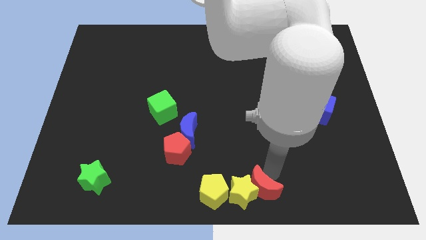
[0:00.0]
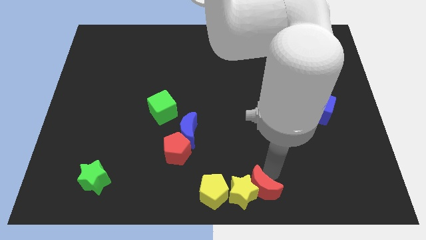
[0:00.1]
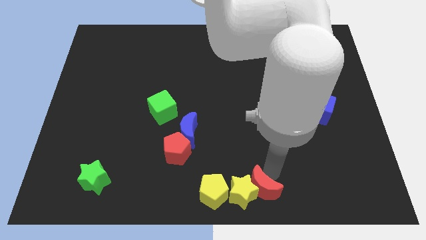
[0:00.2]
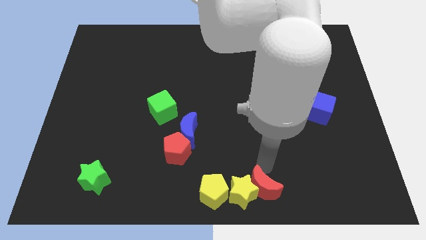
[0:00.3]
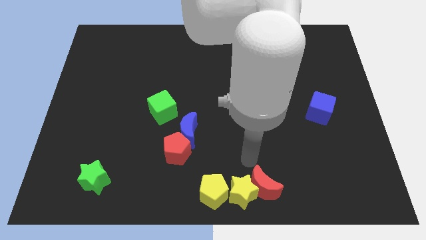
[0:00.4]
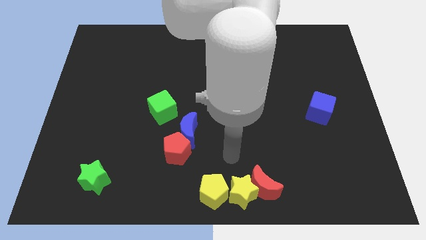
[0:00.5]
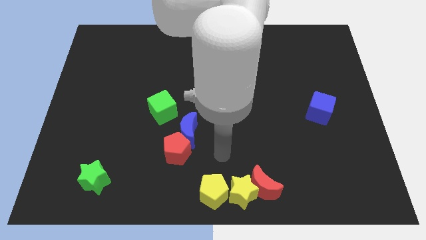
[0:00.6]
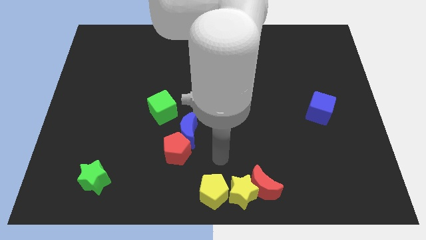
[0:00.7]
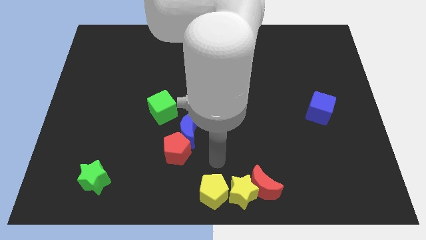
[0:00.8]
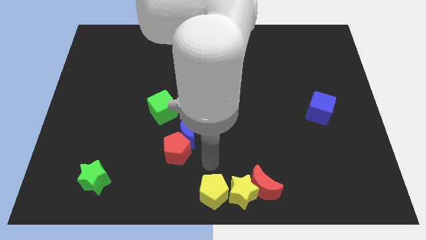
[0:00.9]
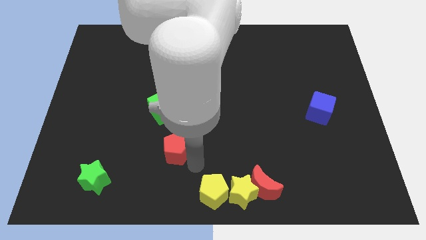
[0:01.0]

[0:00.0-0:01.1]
move away from the red moon

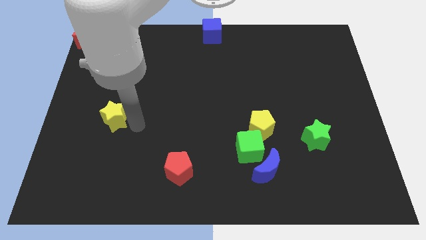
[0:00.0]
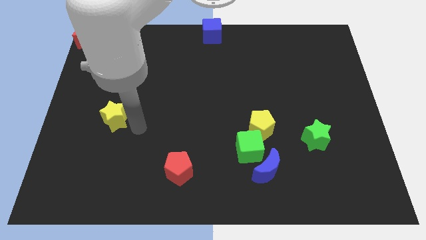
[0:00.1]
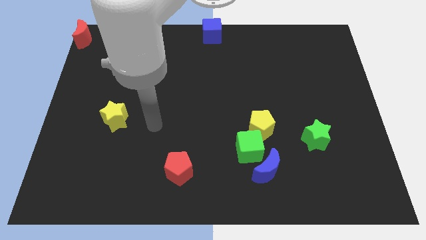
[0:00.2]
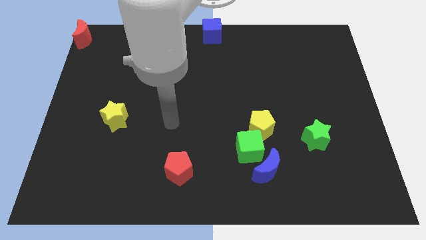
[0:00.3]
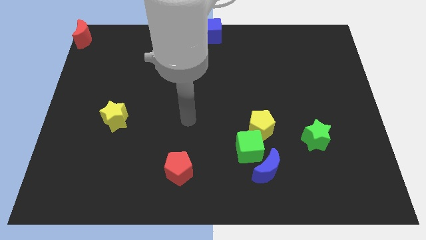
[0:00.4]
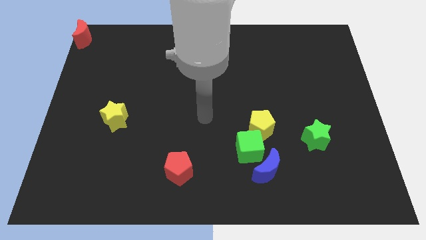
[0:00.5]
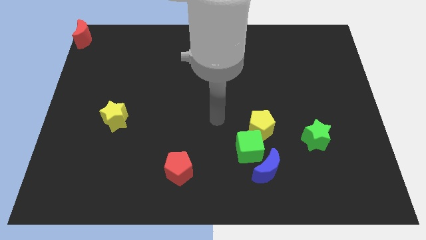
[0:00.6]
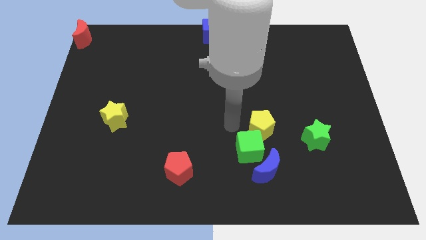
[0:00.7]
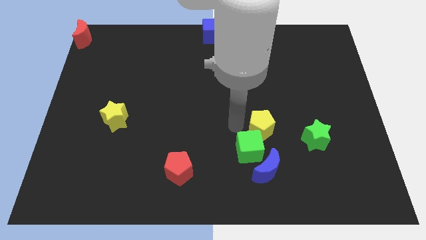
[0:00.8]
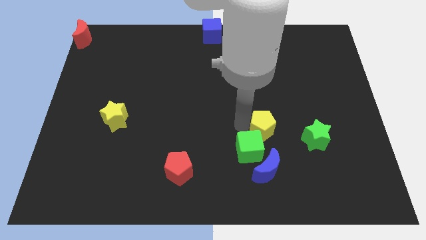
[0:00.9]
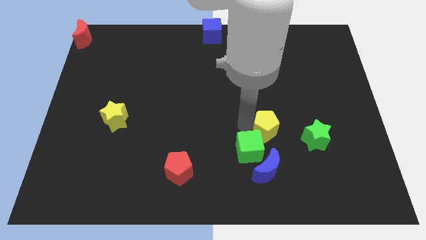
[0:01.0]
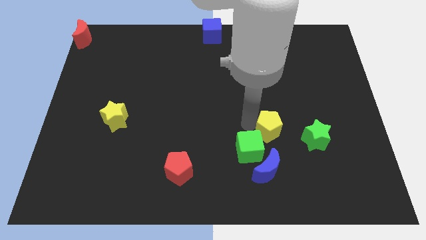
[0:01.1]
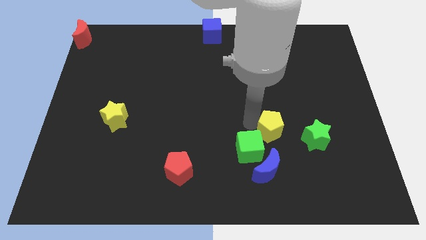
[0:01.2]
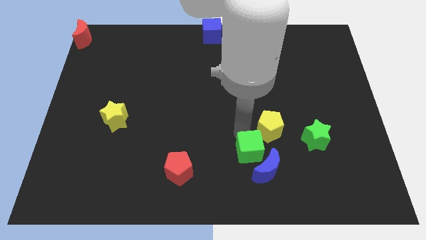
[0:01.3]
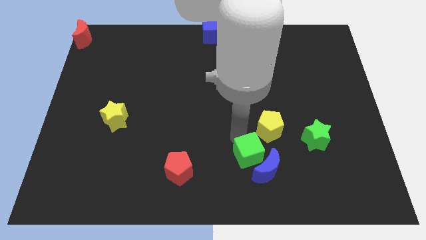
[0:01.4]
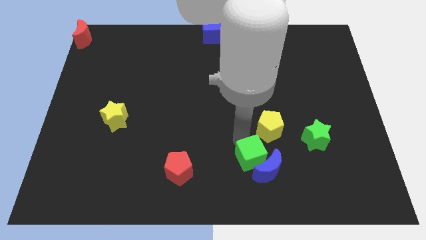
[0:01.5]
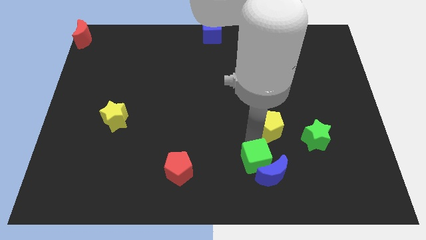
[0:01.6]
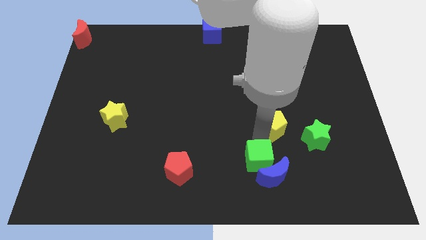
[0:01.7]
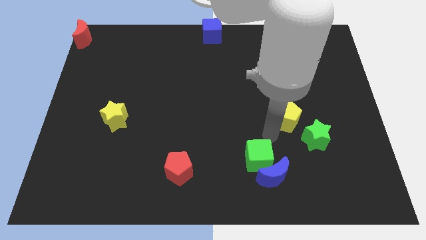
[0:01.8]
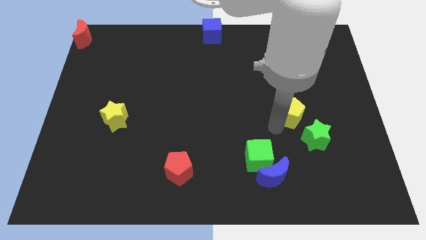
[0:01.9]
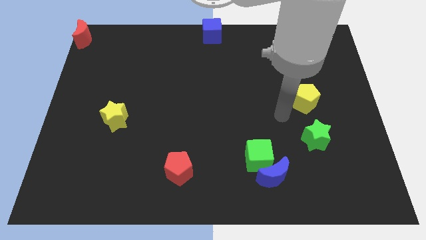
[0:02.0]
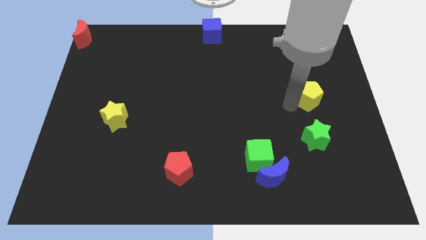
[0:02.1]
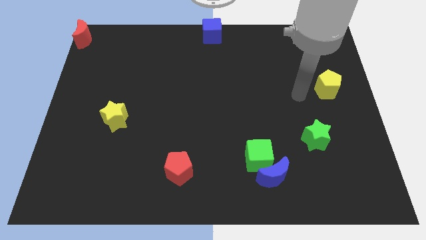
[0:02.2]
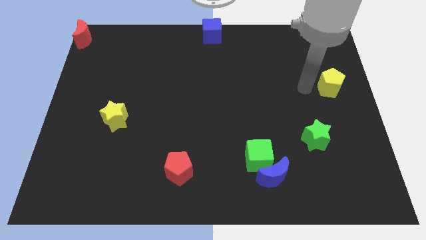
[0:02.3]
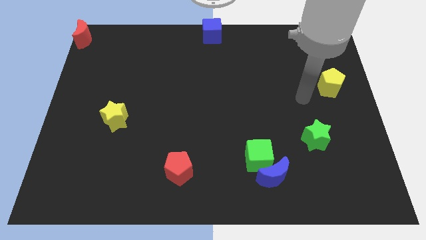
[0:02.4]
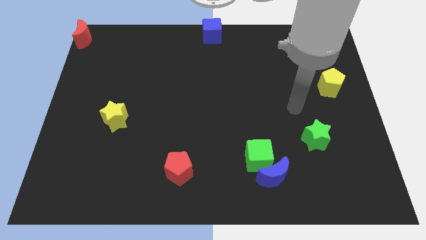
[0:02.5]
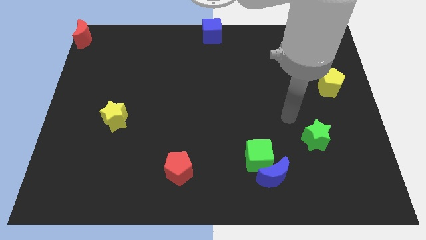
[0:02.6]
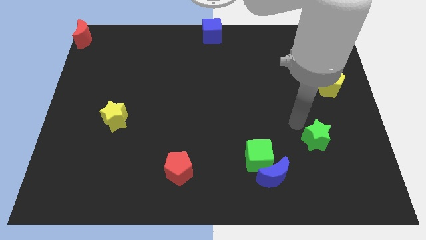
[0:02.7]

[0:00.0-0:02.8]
push the yellow pentagon to the center right

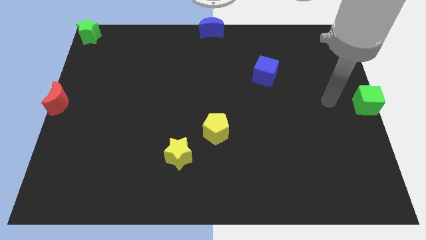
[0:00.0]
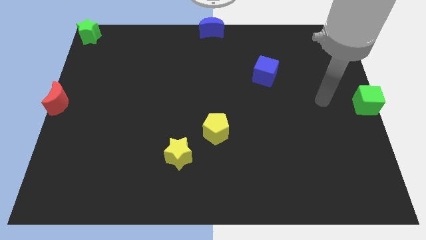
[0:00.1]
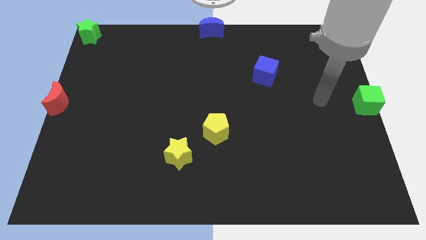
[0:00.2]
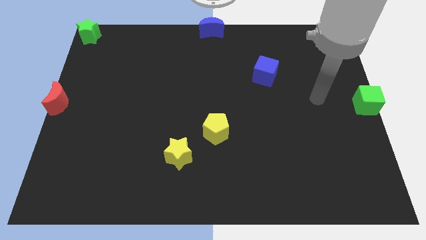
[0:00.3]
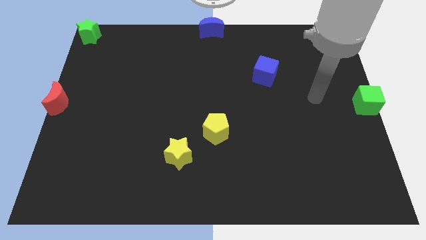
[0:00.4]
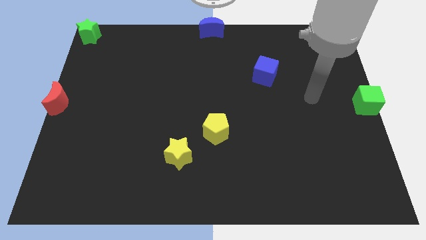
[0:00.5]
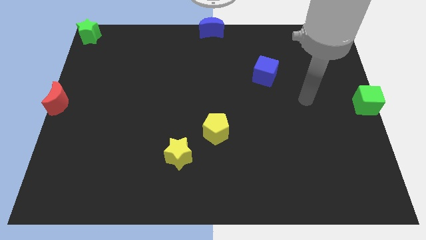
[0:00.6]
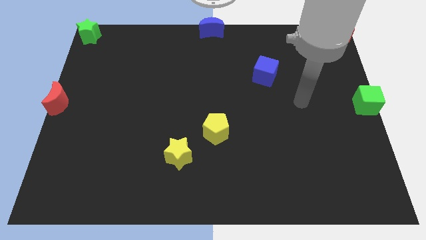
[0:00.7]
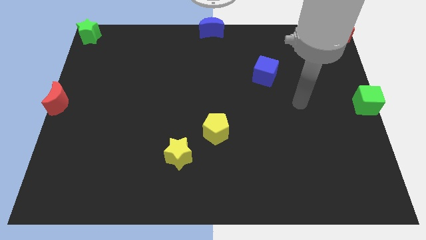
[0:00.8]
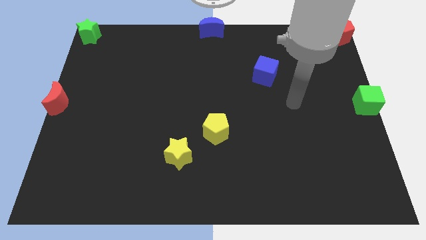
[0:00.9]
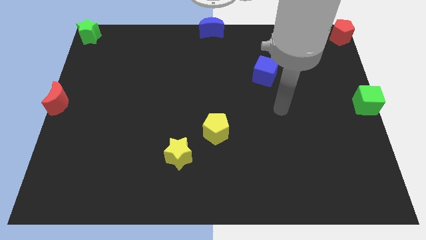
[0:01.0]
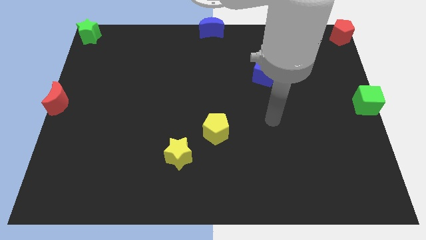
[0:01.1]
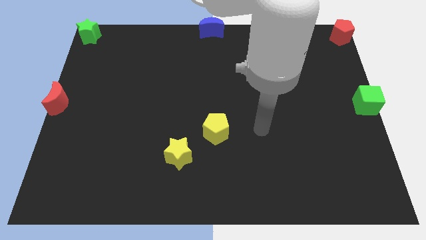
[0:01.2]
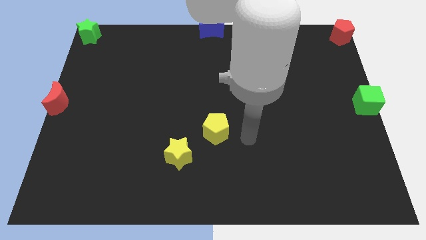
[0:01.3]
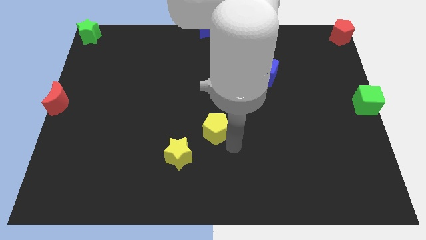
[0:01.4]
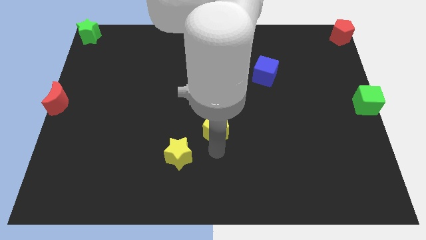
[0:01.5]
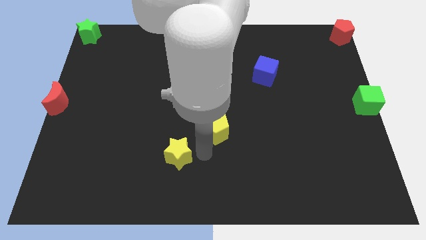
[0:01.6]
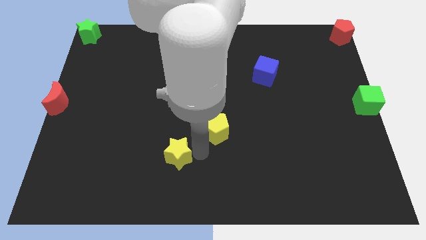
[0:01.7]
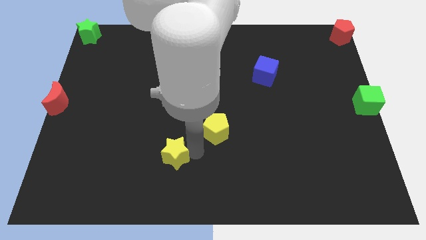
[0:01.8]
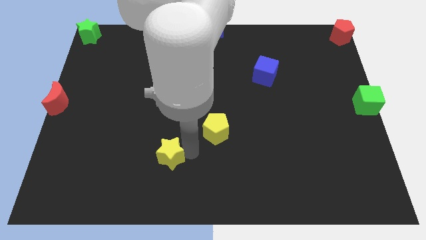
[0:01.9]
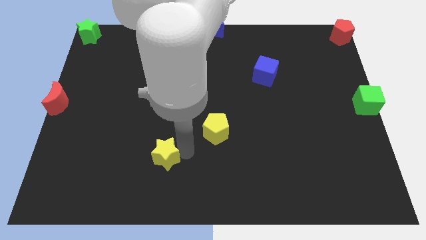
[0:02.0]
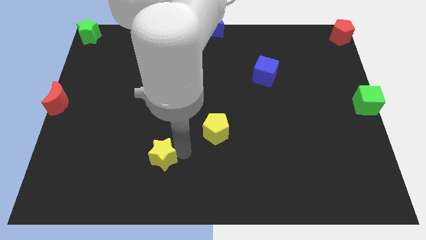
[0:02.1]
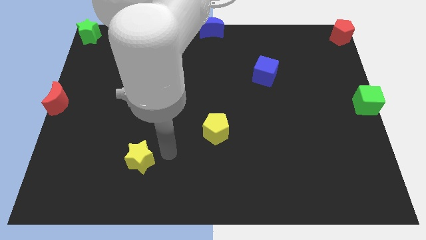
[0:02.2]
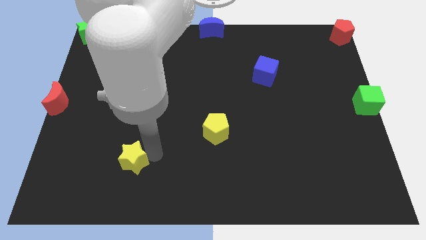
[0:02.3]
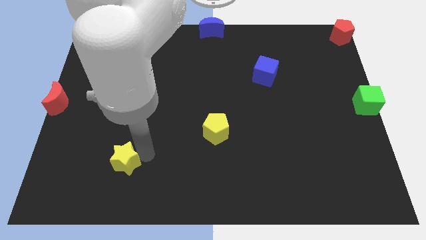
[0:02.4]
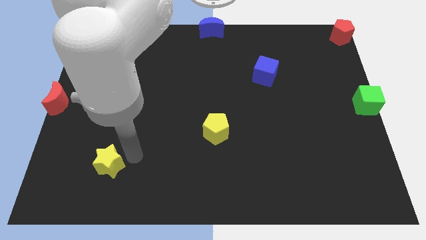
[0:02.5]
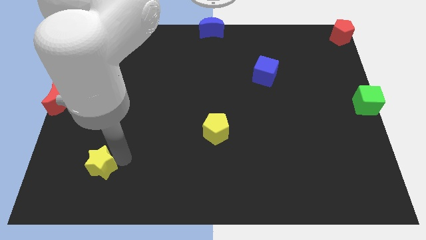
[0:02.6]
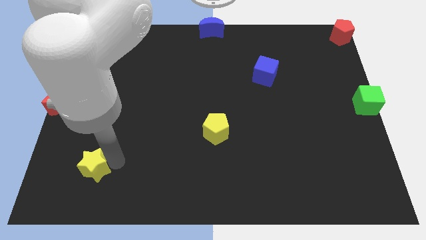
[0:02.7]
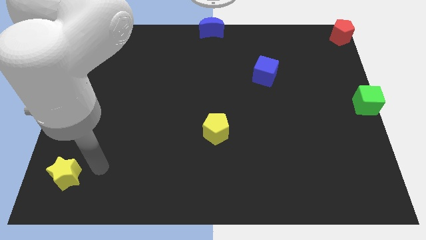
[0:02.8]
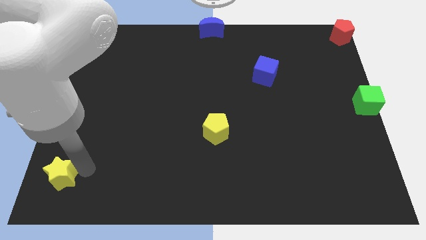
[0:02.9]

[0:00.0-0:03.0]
push the yellow star to the left of the board

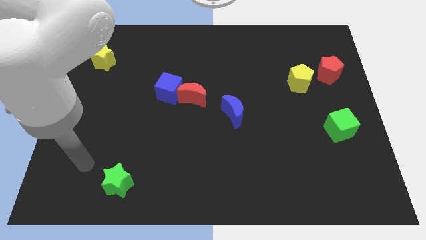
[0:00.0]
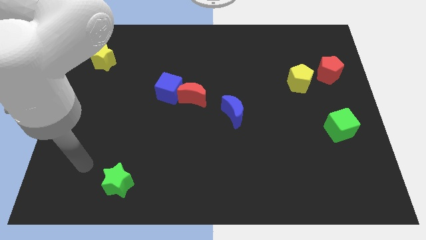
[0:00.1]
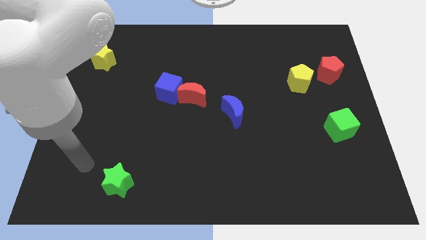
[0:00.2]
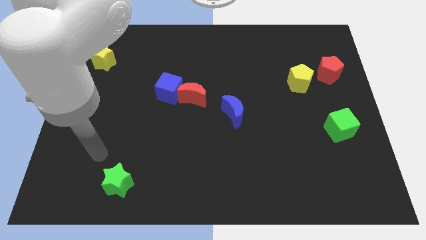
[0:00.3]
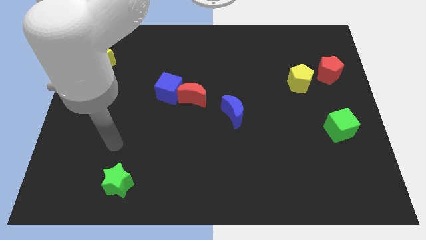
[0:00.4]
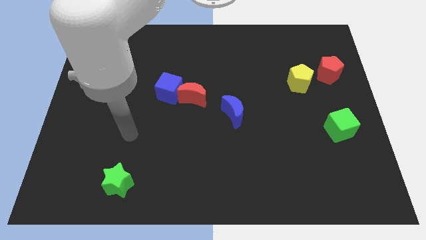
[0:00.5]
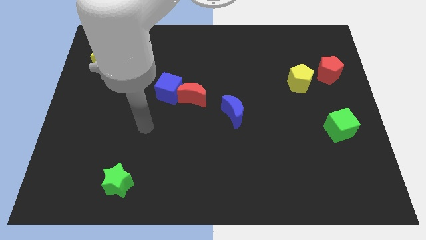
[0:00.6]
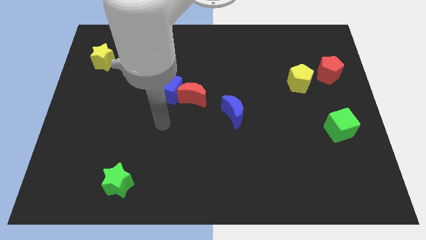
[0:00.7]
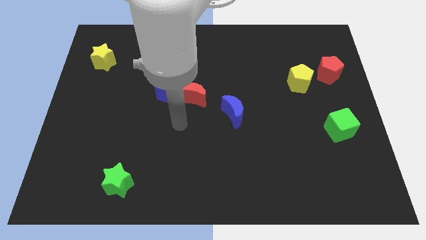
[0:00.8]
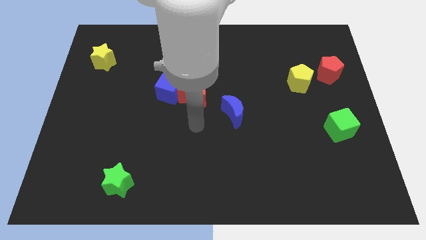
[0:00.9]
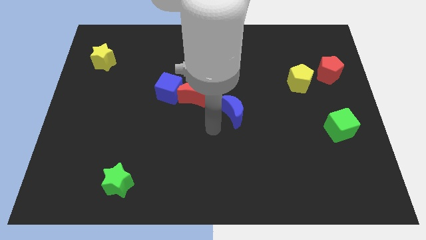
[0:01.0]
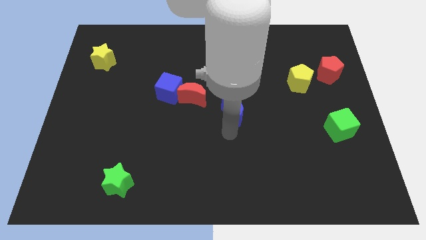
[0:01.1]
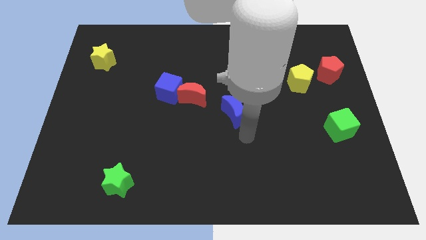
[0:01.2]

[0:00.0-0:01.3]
place your arm to the bottom of the blue moon

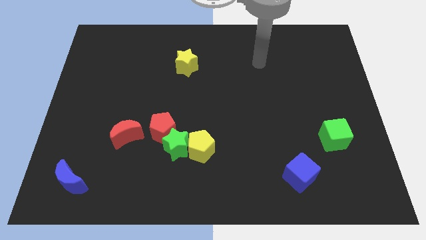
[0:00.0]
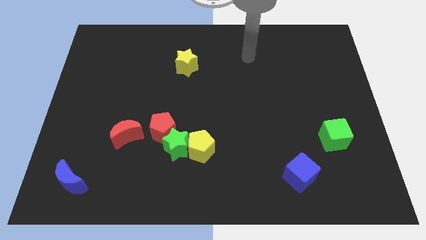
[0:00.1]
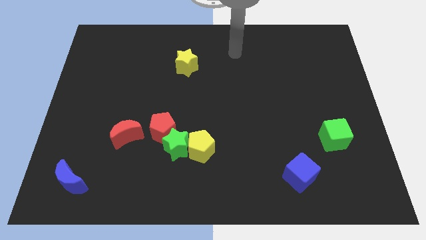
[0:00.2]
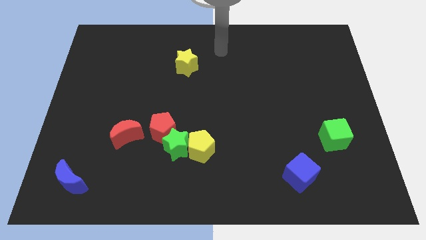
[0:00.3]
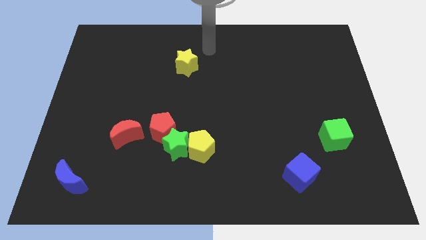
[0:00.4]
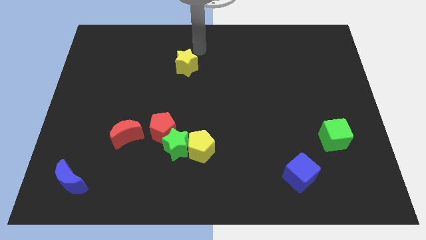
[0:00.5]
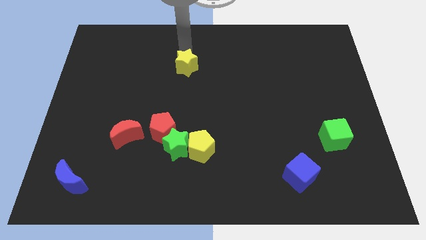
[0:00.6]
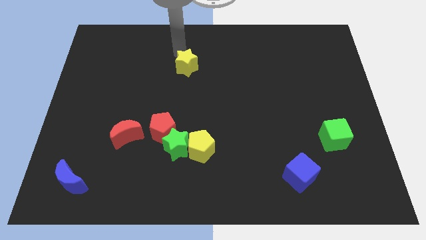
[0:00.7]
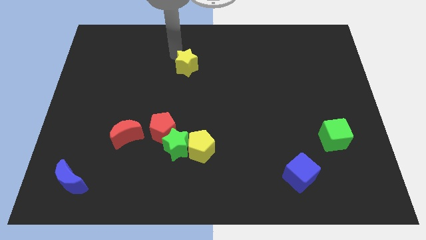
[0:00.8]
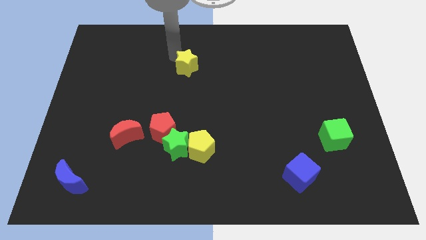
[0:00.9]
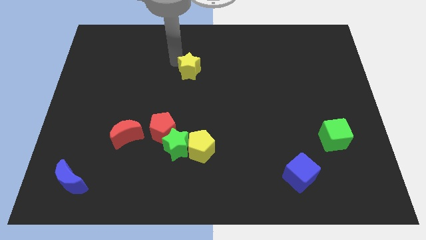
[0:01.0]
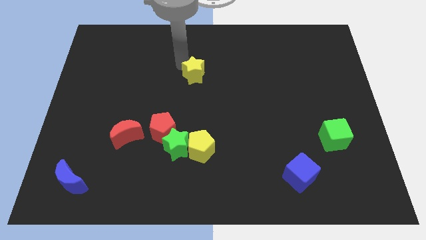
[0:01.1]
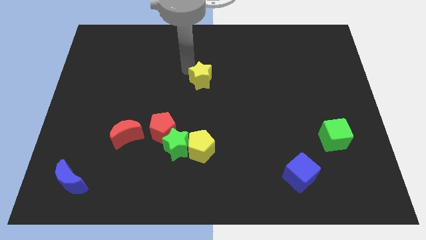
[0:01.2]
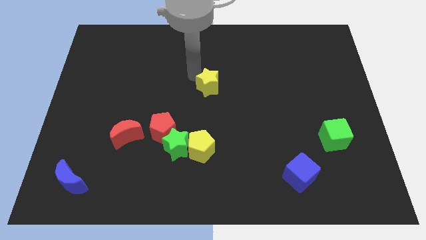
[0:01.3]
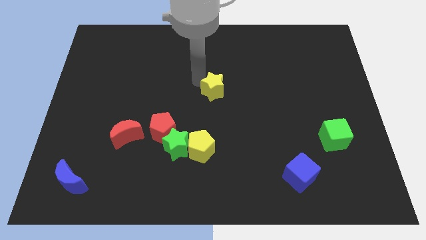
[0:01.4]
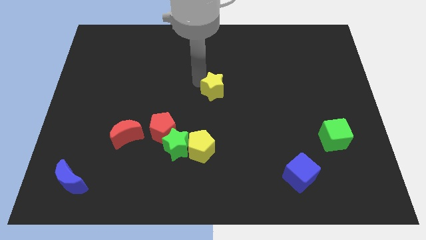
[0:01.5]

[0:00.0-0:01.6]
move the yellow star to the center of the board
